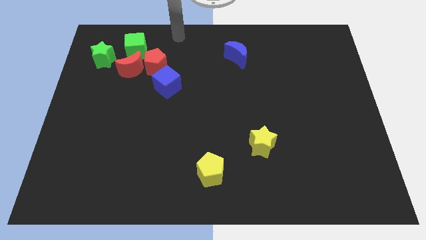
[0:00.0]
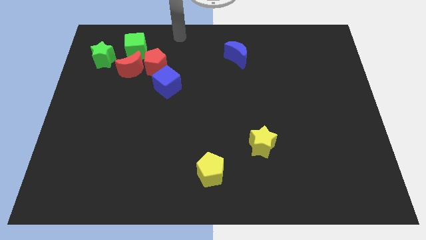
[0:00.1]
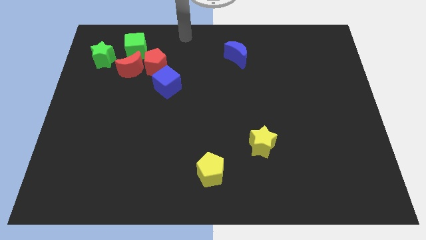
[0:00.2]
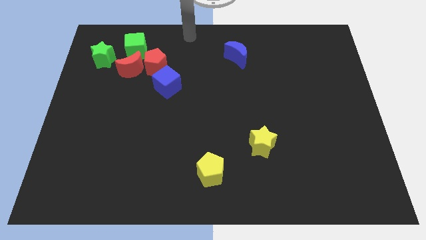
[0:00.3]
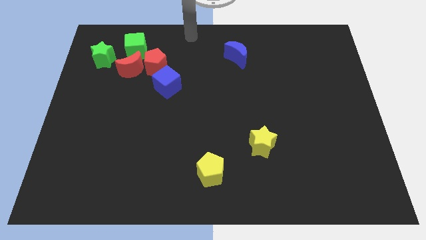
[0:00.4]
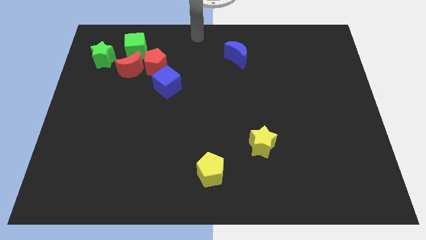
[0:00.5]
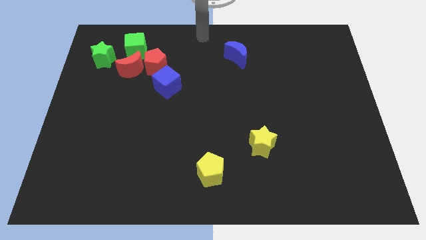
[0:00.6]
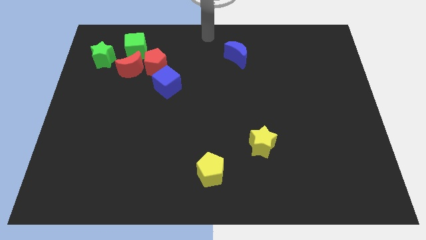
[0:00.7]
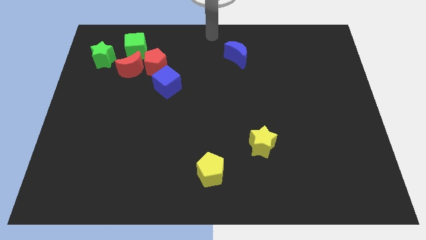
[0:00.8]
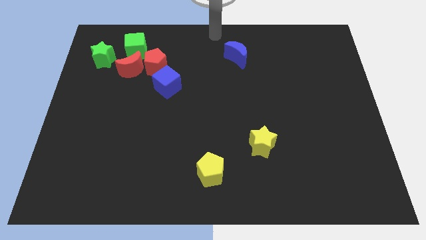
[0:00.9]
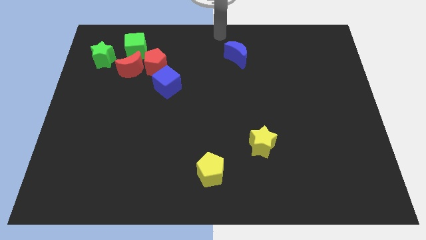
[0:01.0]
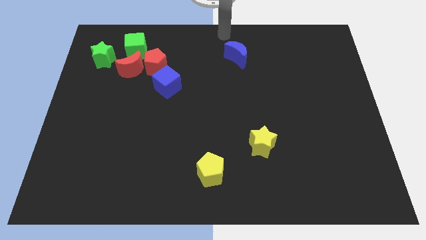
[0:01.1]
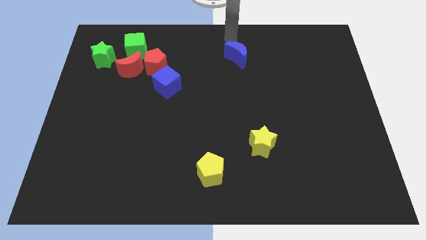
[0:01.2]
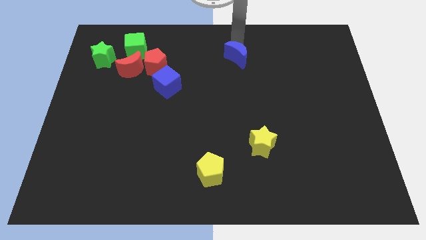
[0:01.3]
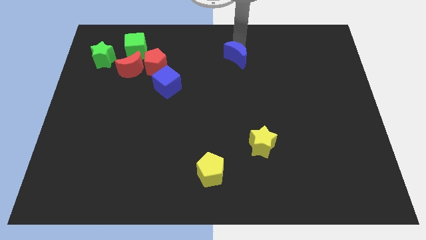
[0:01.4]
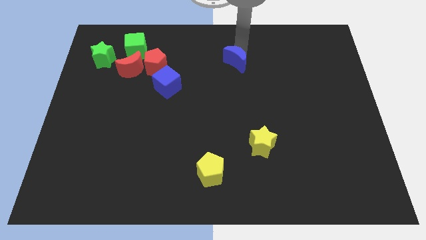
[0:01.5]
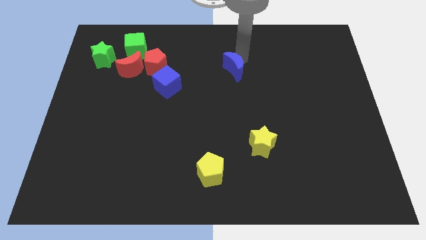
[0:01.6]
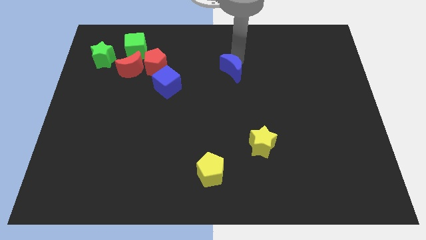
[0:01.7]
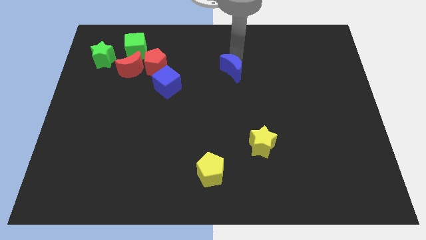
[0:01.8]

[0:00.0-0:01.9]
move the blue moon slightly to the bottom

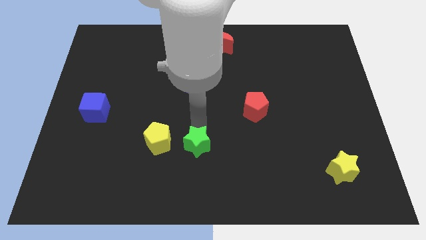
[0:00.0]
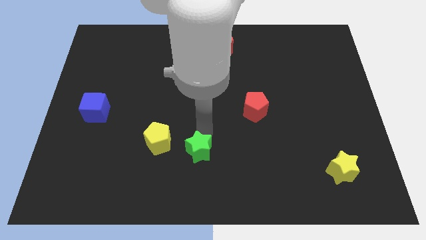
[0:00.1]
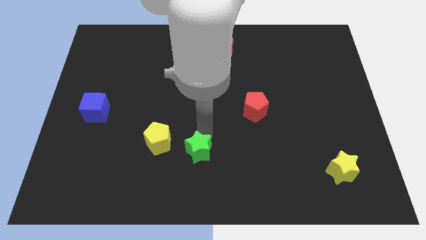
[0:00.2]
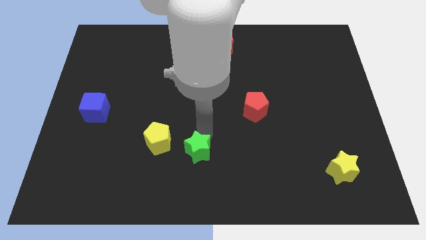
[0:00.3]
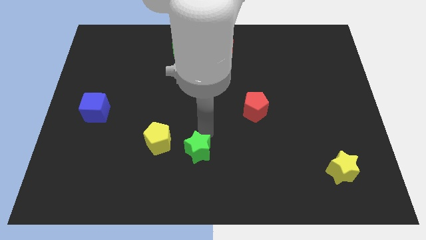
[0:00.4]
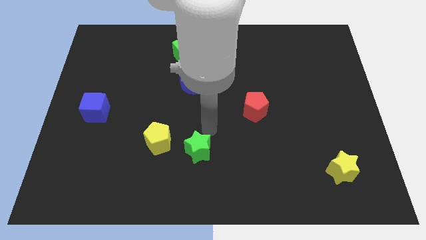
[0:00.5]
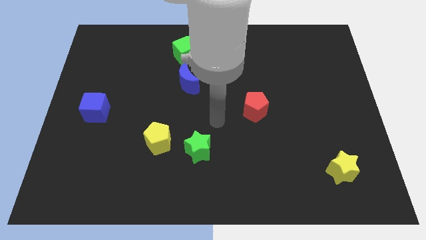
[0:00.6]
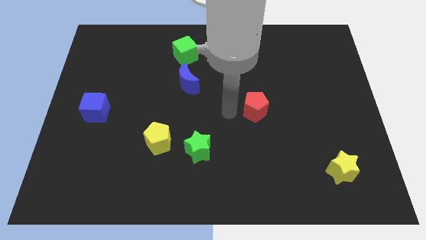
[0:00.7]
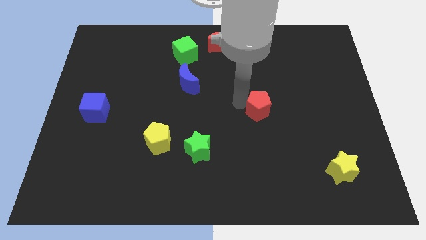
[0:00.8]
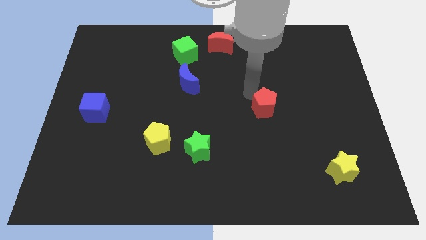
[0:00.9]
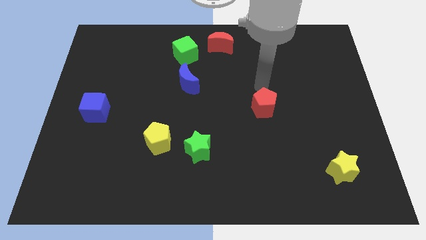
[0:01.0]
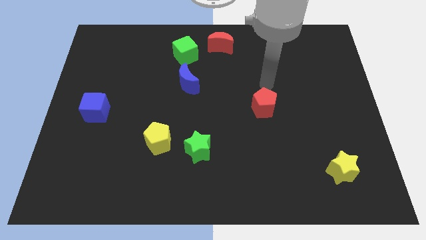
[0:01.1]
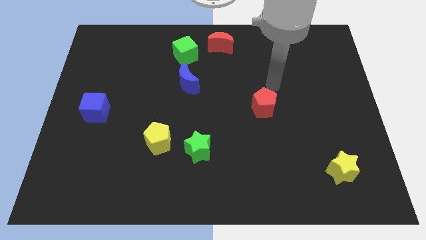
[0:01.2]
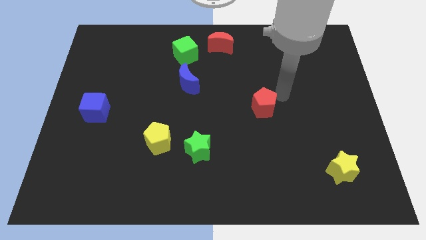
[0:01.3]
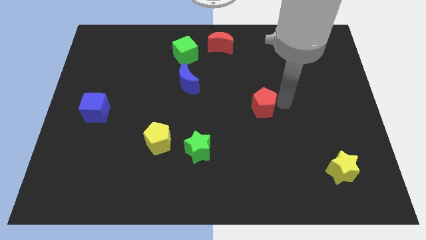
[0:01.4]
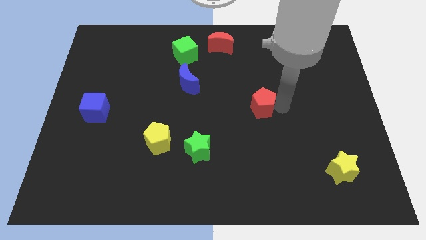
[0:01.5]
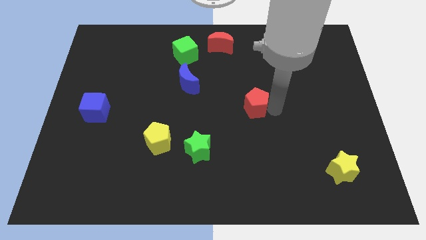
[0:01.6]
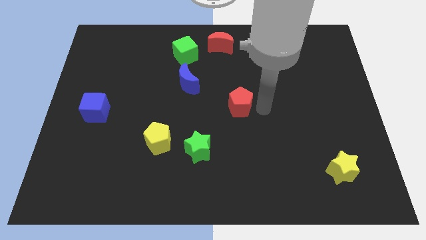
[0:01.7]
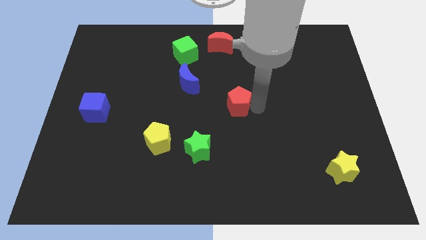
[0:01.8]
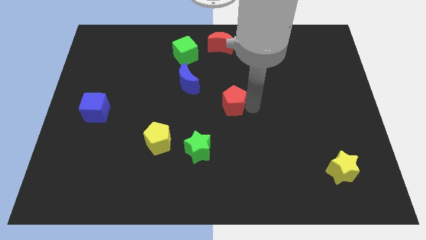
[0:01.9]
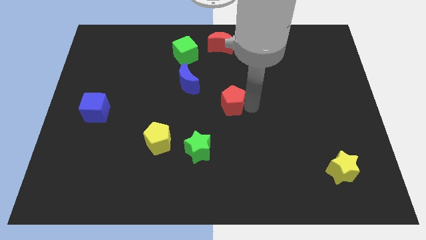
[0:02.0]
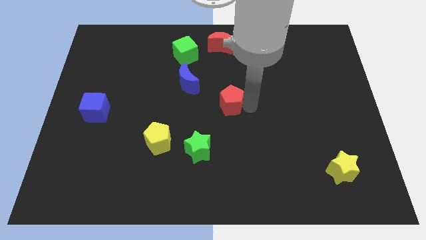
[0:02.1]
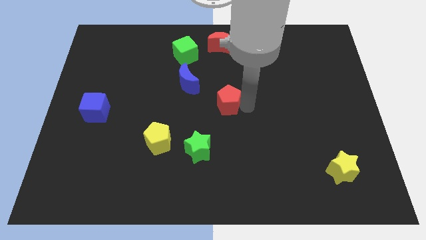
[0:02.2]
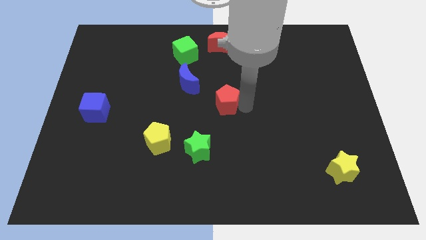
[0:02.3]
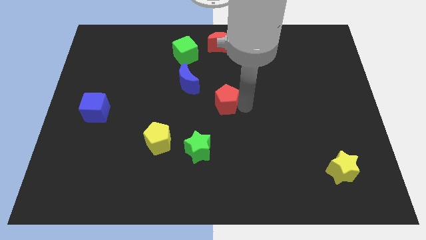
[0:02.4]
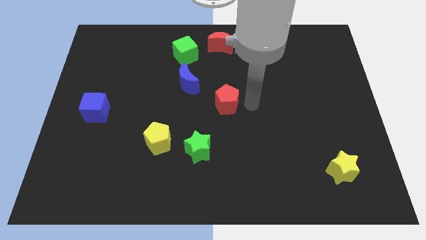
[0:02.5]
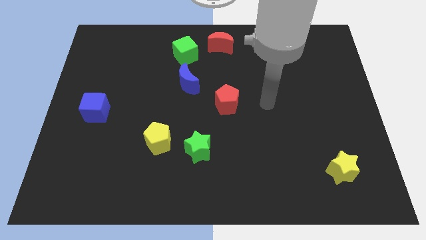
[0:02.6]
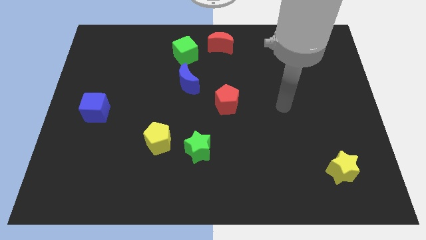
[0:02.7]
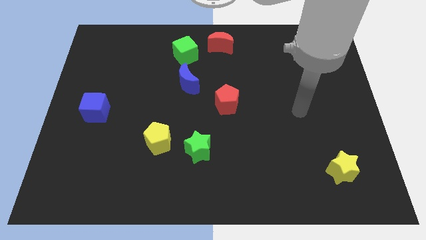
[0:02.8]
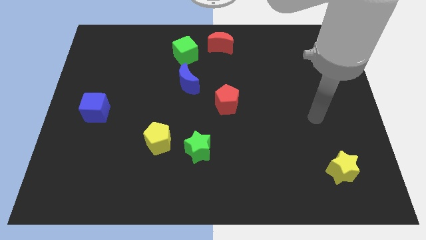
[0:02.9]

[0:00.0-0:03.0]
push the red pentagon towards the center of the board

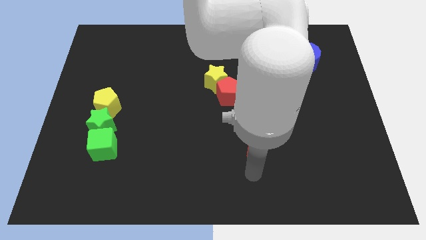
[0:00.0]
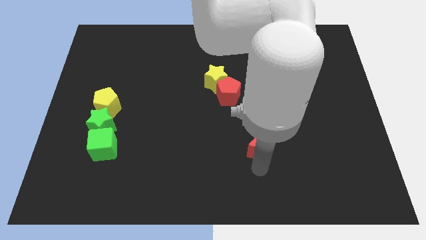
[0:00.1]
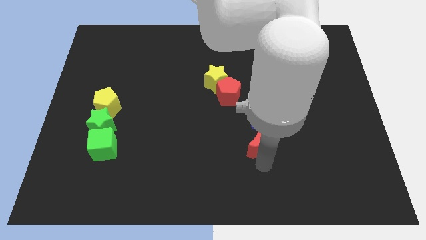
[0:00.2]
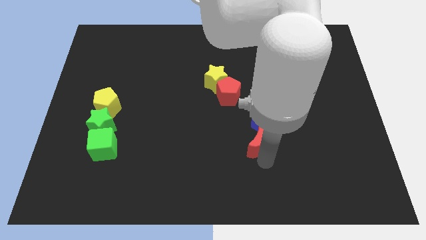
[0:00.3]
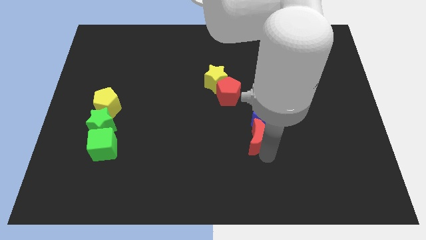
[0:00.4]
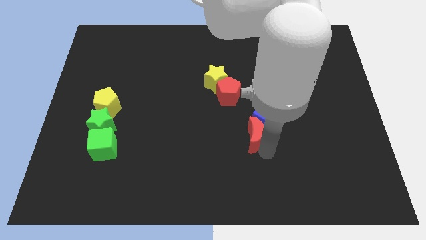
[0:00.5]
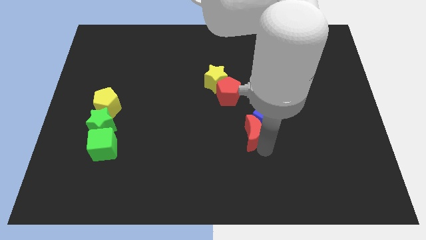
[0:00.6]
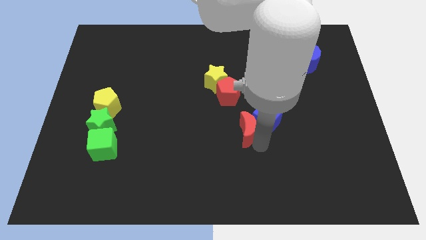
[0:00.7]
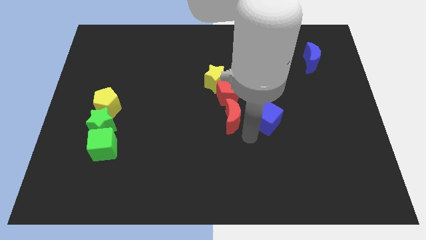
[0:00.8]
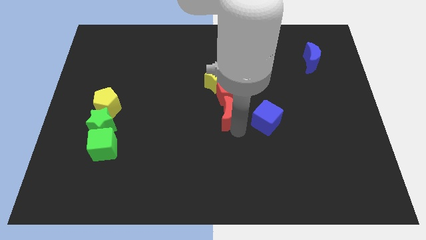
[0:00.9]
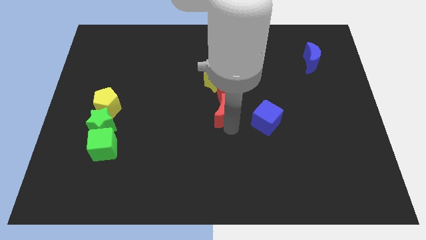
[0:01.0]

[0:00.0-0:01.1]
separate the red crescent from the blue cube

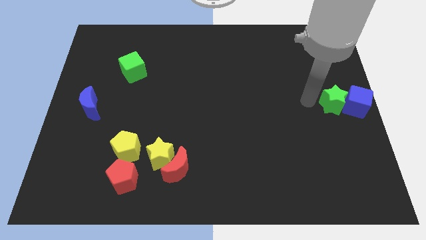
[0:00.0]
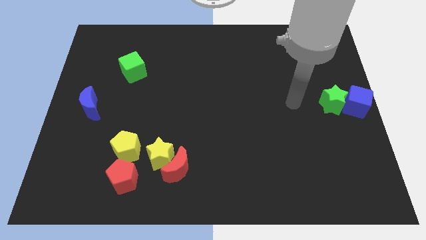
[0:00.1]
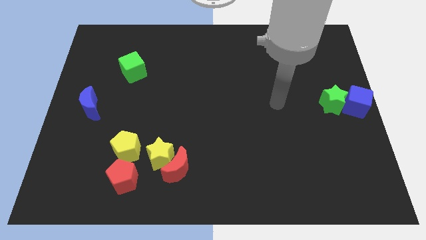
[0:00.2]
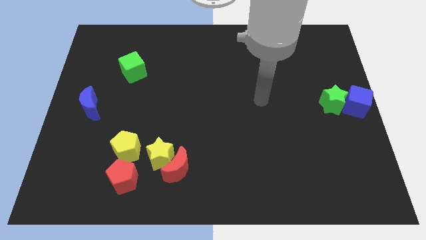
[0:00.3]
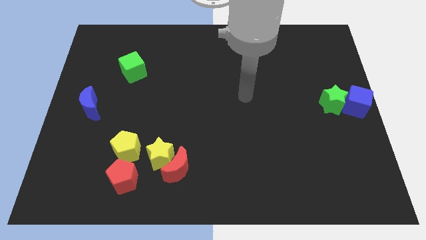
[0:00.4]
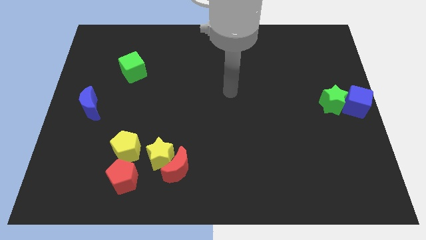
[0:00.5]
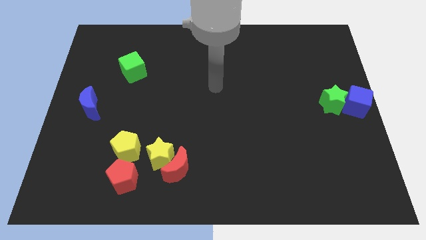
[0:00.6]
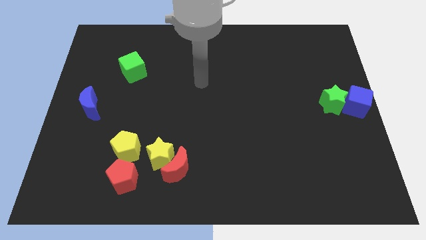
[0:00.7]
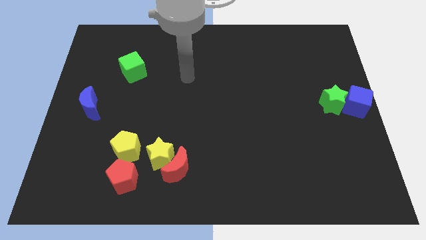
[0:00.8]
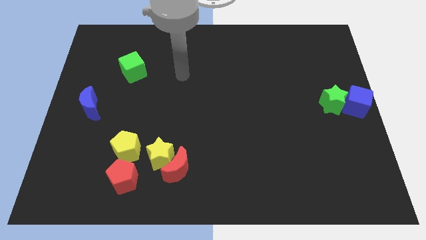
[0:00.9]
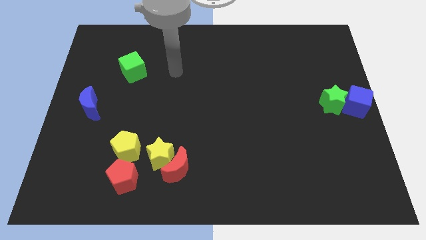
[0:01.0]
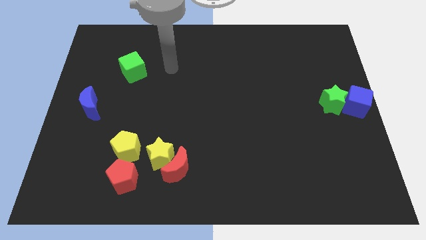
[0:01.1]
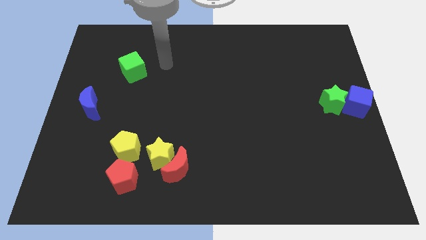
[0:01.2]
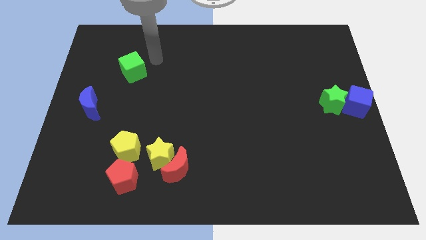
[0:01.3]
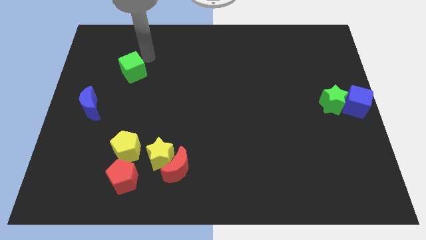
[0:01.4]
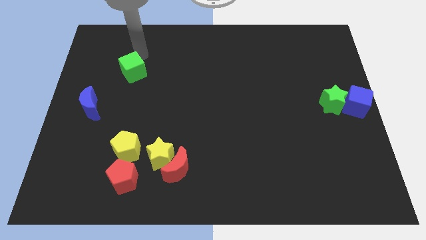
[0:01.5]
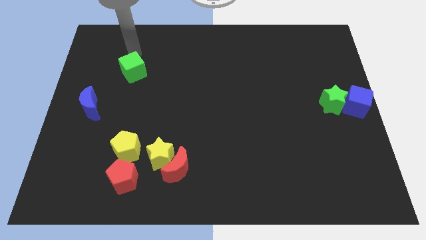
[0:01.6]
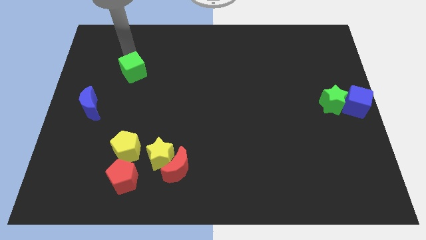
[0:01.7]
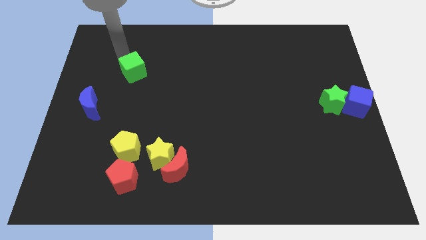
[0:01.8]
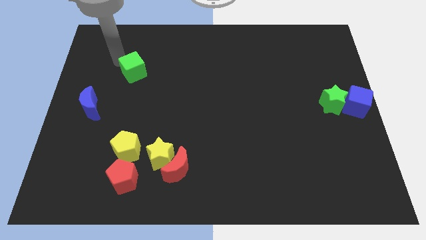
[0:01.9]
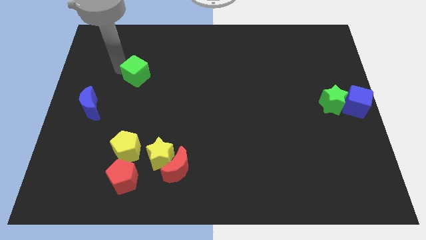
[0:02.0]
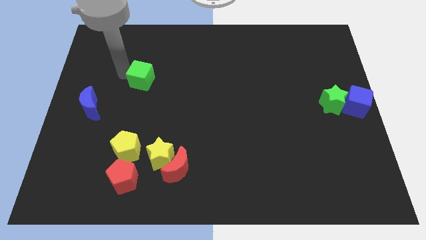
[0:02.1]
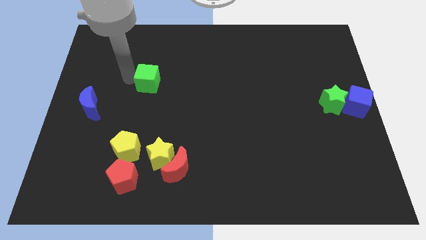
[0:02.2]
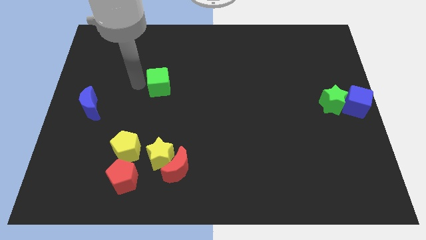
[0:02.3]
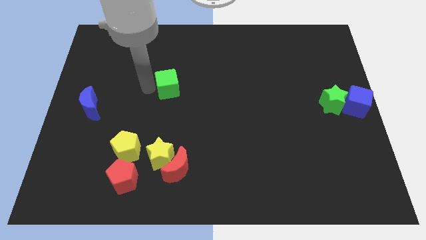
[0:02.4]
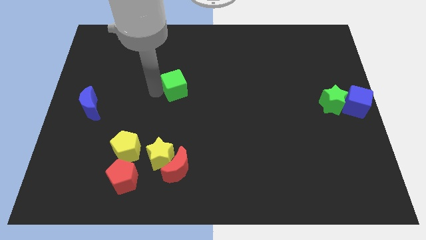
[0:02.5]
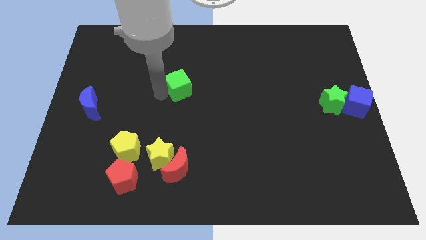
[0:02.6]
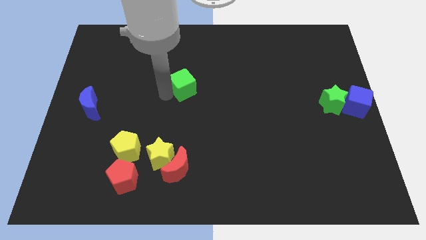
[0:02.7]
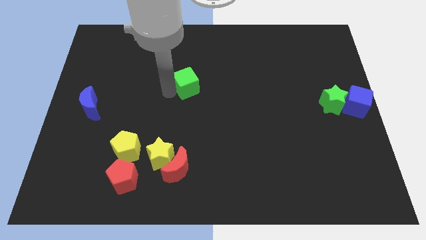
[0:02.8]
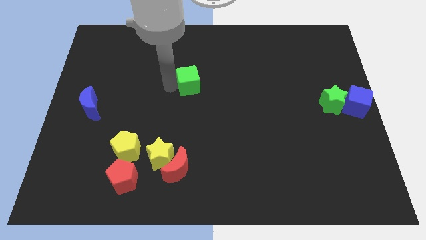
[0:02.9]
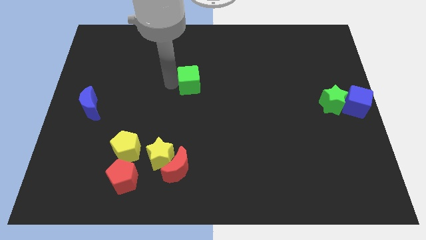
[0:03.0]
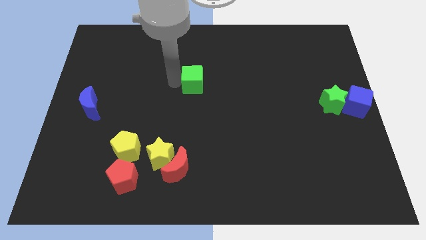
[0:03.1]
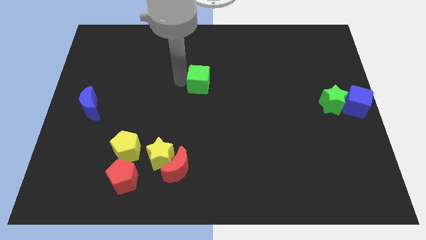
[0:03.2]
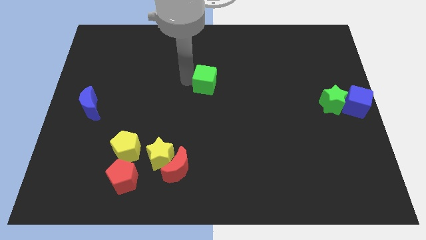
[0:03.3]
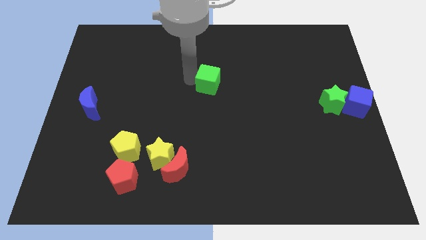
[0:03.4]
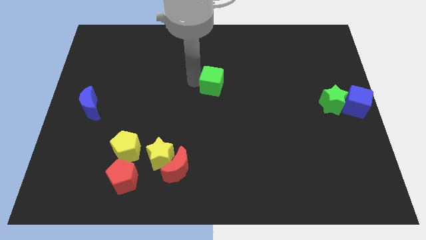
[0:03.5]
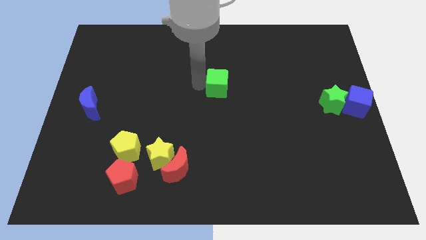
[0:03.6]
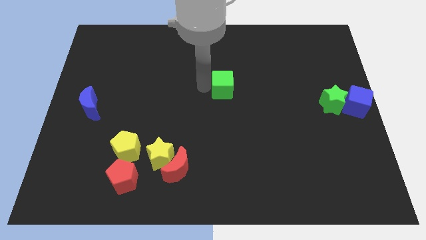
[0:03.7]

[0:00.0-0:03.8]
push the blue cube to the center of the board
